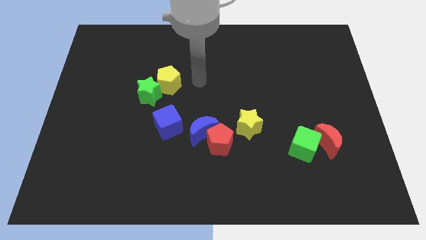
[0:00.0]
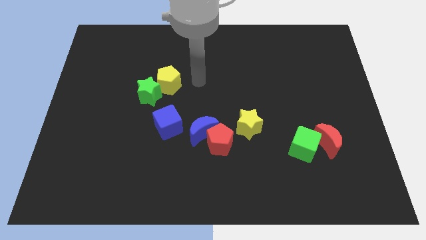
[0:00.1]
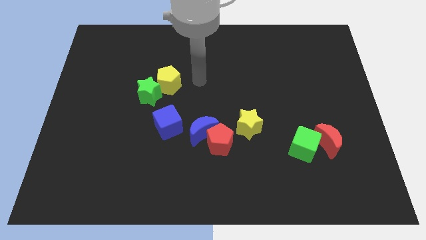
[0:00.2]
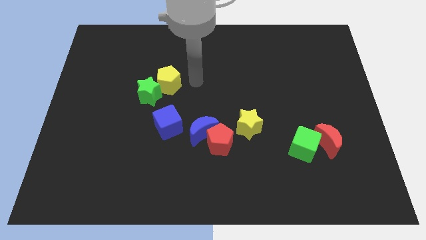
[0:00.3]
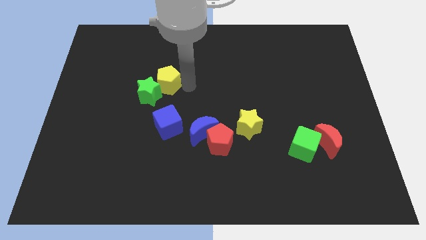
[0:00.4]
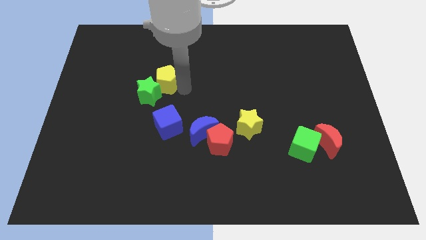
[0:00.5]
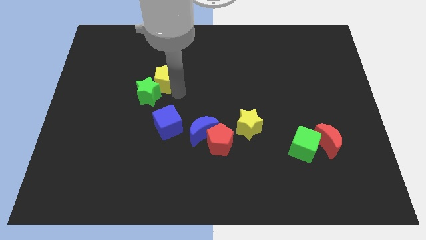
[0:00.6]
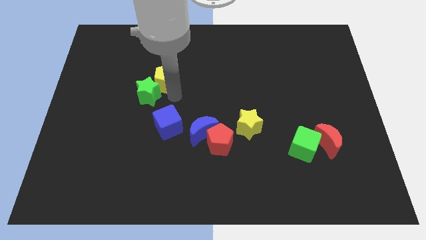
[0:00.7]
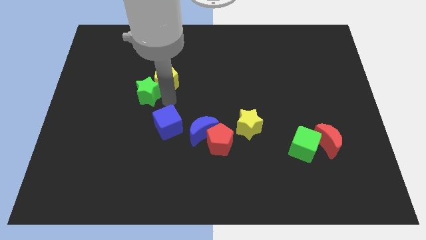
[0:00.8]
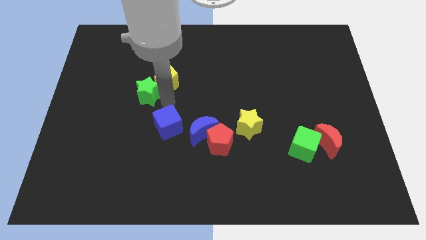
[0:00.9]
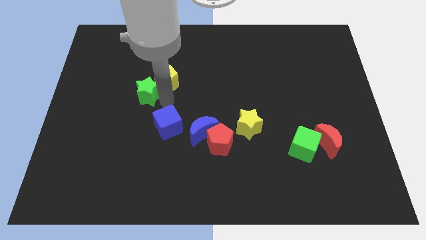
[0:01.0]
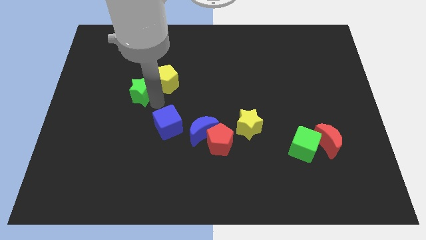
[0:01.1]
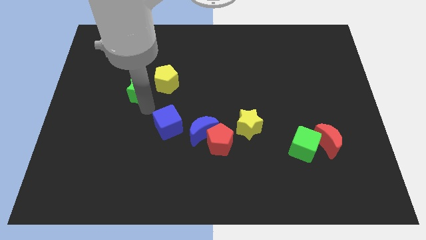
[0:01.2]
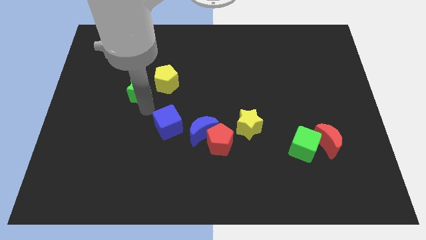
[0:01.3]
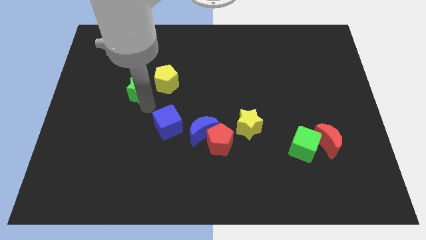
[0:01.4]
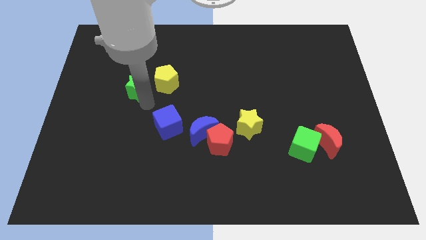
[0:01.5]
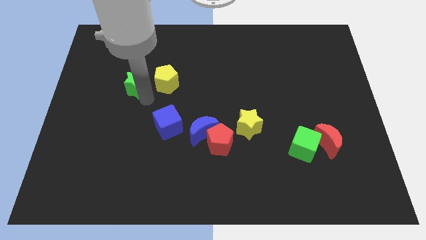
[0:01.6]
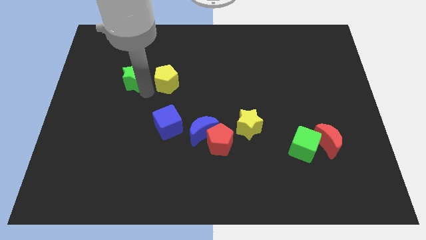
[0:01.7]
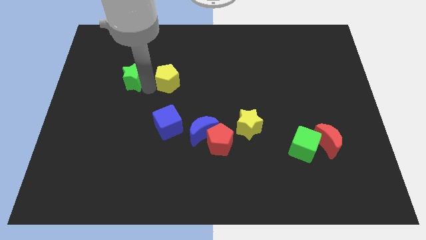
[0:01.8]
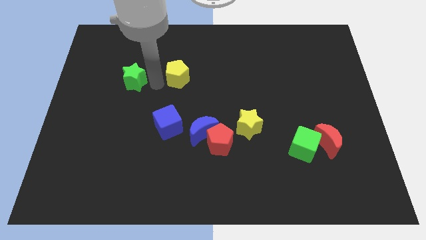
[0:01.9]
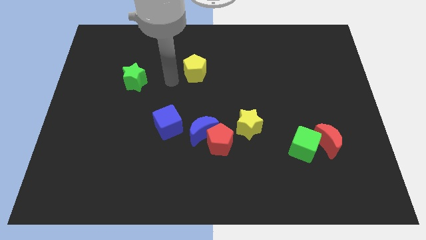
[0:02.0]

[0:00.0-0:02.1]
separate green star and the yellow pentagon

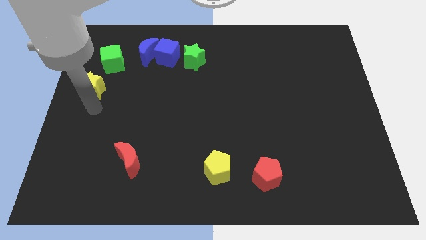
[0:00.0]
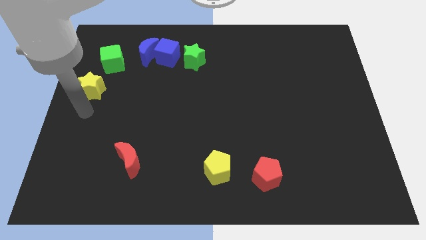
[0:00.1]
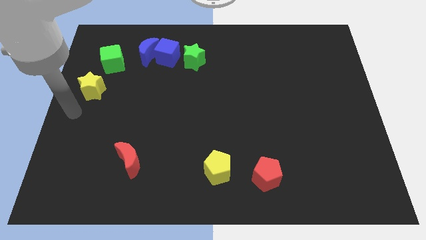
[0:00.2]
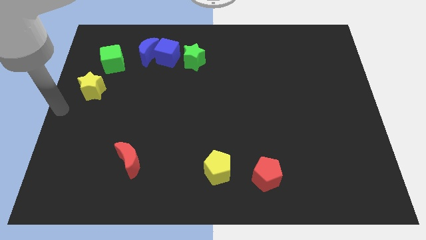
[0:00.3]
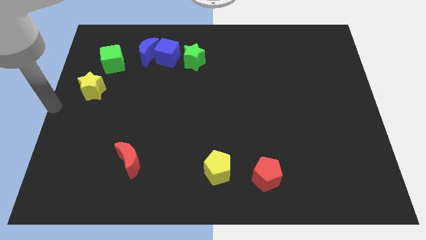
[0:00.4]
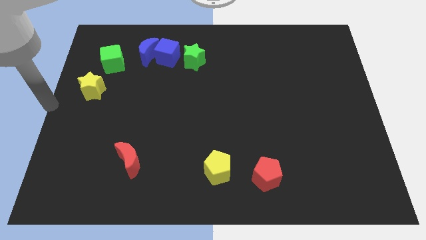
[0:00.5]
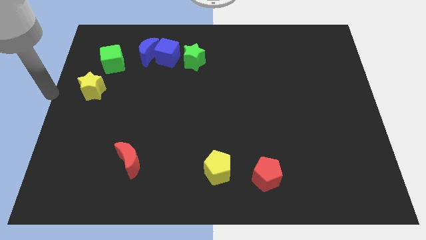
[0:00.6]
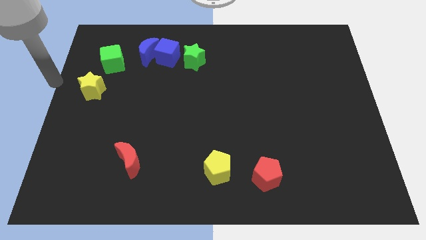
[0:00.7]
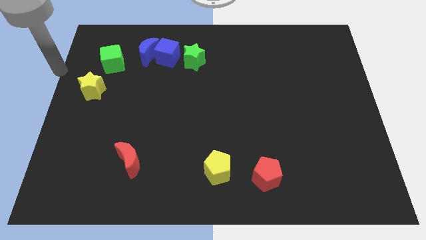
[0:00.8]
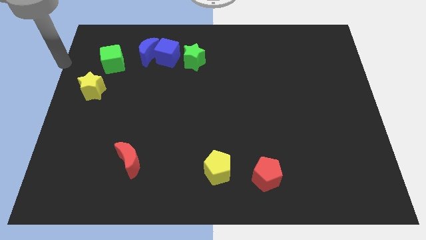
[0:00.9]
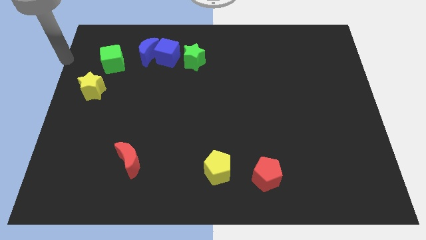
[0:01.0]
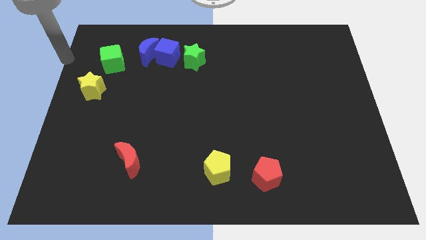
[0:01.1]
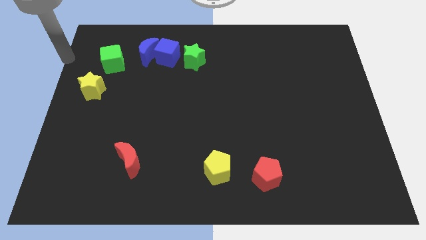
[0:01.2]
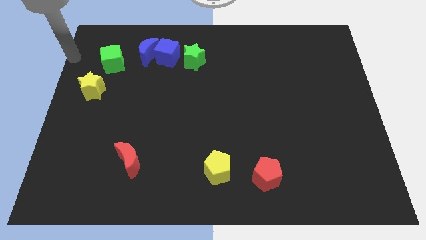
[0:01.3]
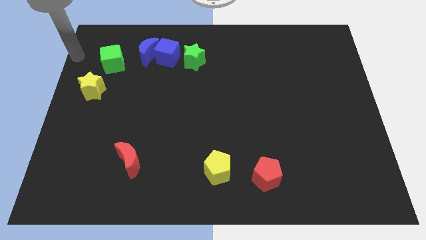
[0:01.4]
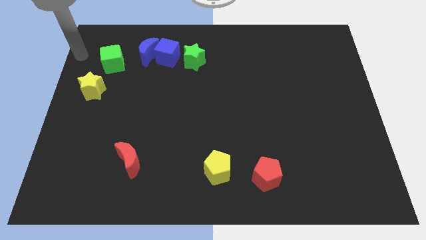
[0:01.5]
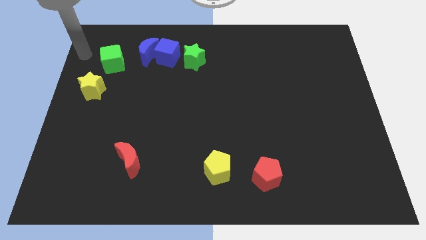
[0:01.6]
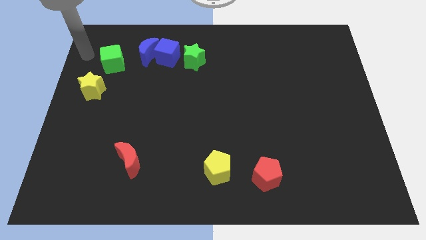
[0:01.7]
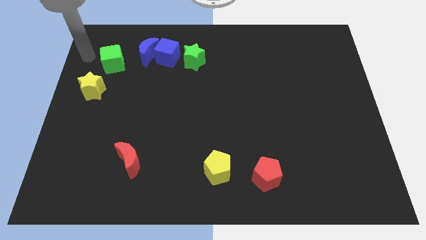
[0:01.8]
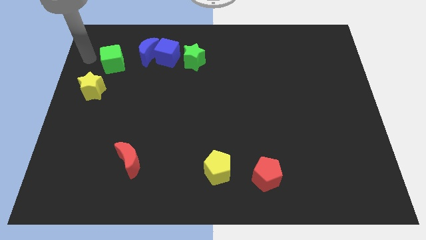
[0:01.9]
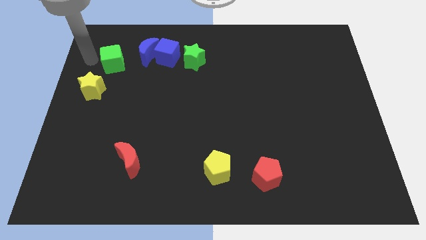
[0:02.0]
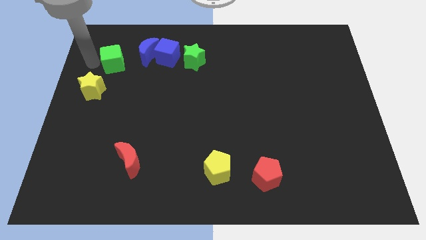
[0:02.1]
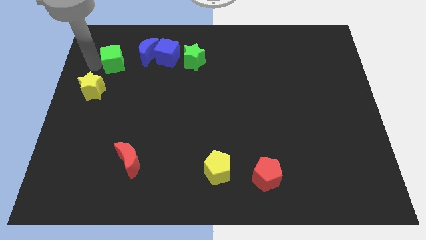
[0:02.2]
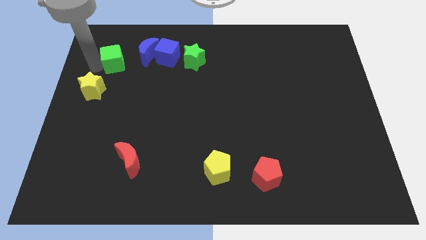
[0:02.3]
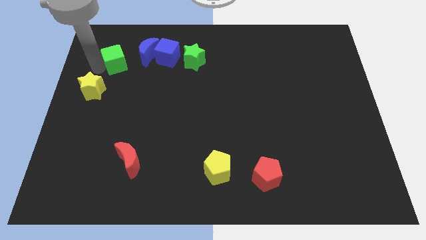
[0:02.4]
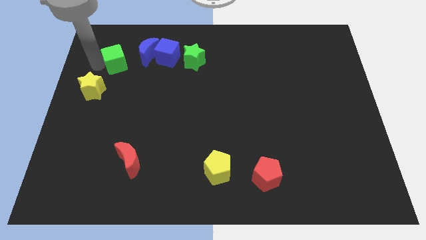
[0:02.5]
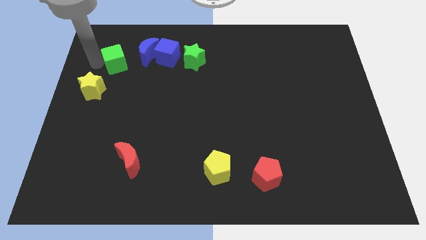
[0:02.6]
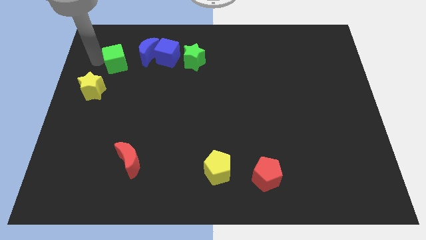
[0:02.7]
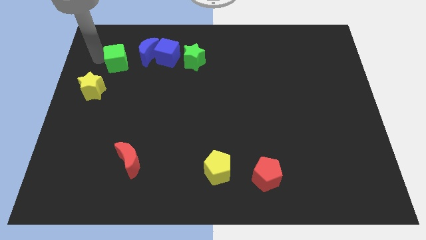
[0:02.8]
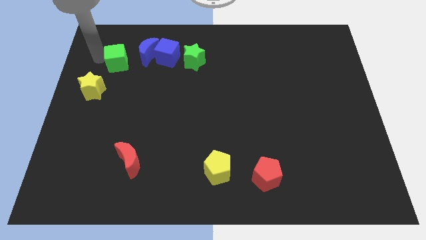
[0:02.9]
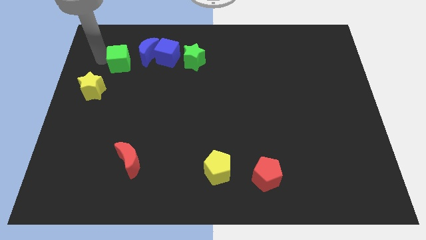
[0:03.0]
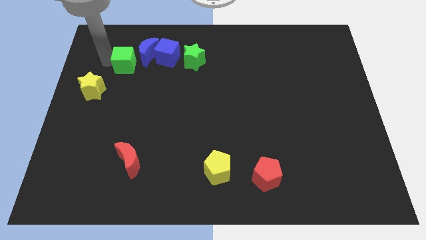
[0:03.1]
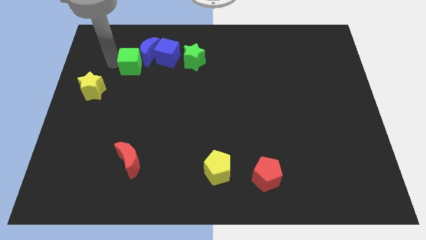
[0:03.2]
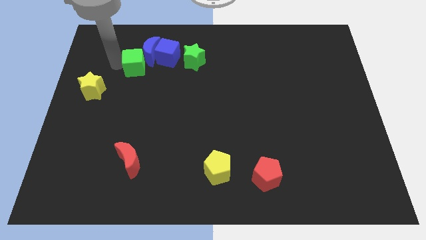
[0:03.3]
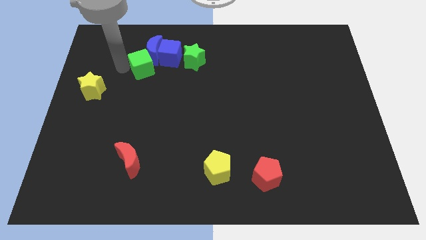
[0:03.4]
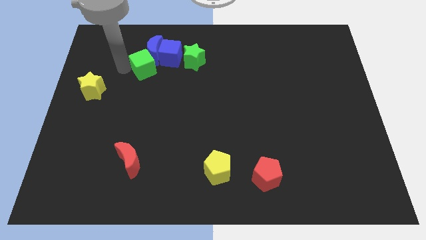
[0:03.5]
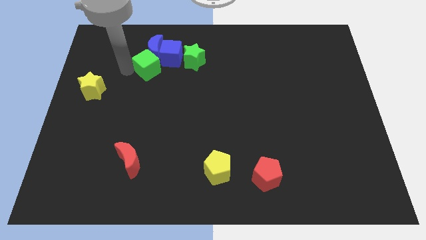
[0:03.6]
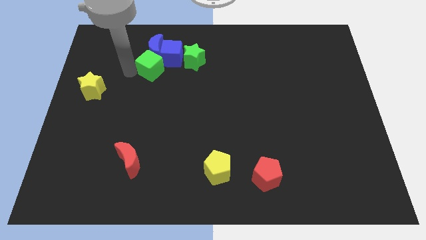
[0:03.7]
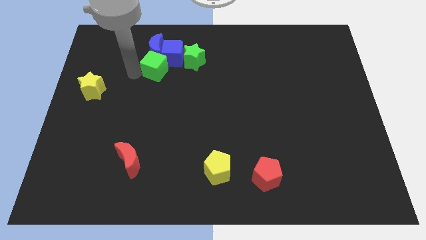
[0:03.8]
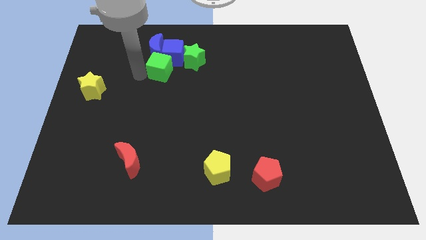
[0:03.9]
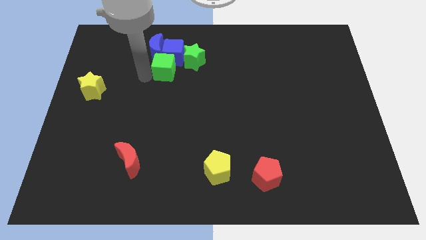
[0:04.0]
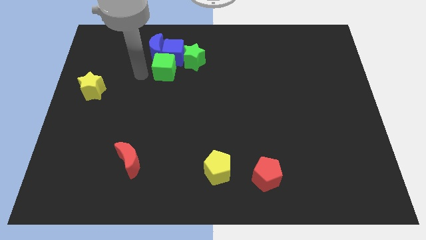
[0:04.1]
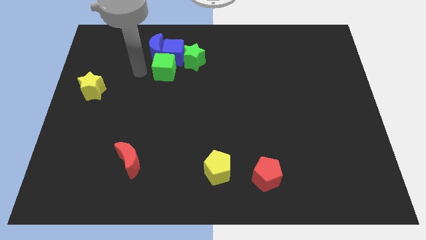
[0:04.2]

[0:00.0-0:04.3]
move green cube below the blue cube

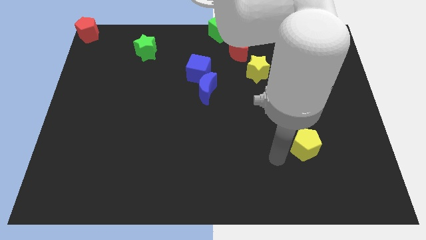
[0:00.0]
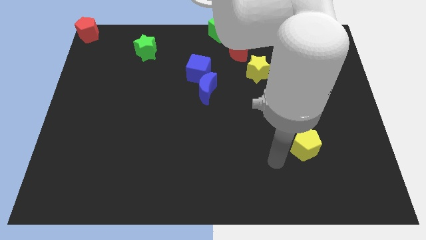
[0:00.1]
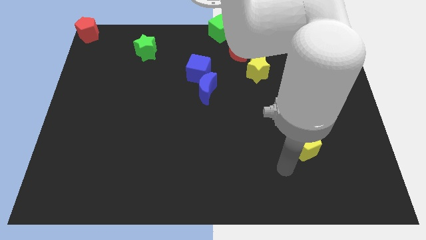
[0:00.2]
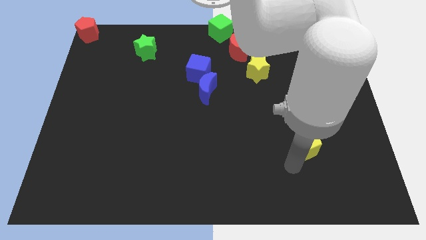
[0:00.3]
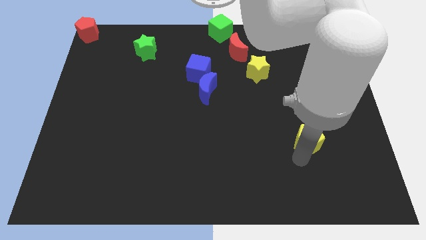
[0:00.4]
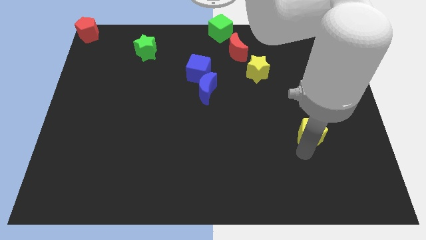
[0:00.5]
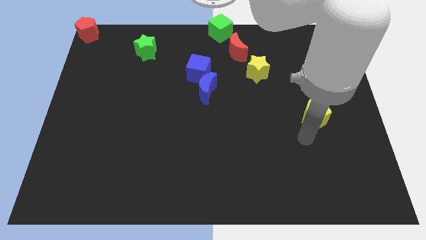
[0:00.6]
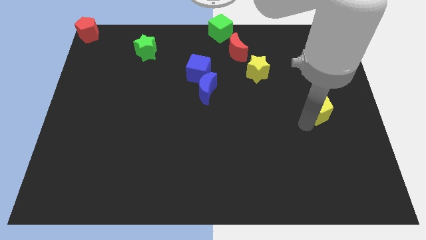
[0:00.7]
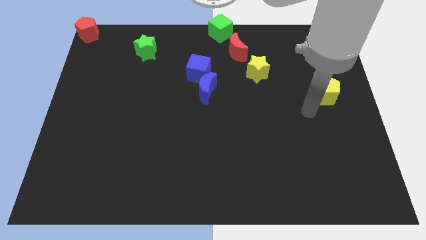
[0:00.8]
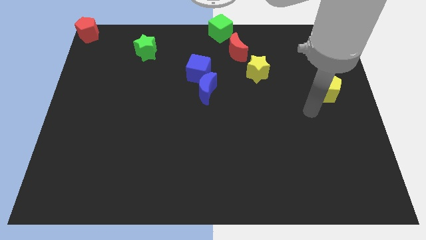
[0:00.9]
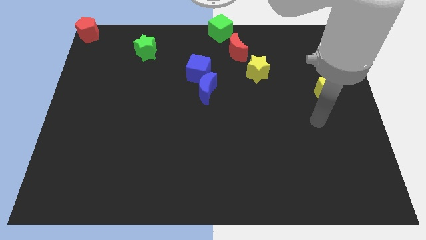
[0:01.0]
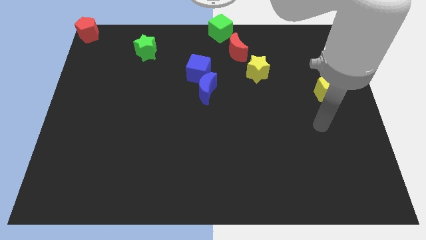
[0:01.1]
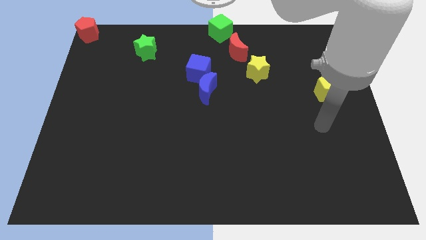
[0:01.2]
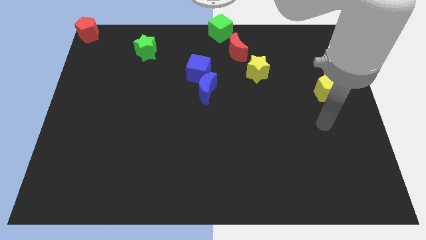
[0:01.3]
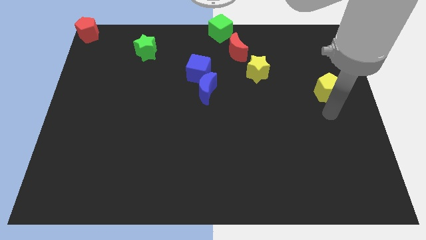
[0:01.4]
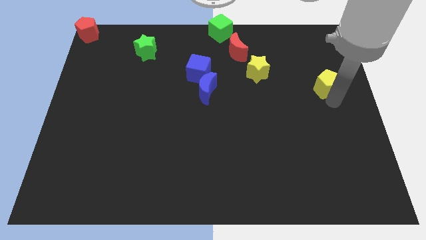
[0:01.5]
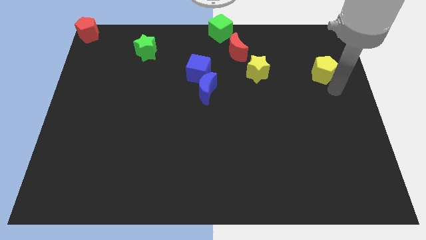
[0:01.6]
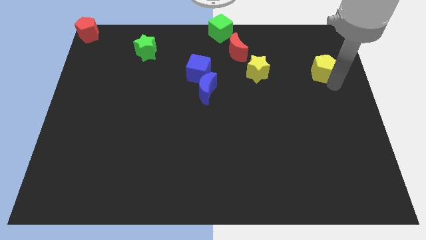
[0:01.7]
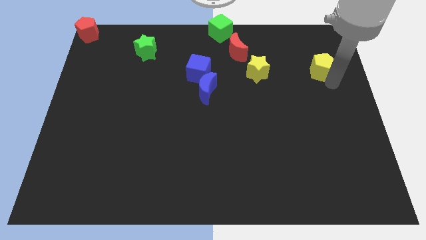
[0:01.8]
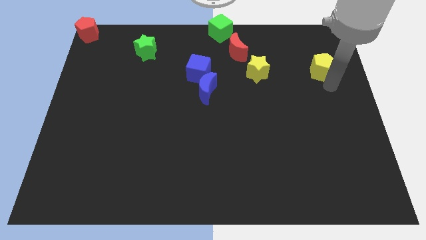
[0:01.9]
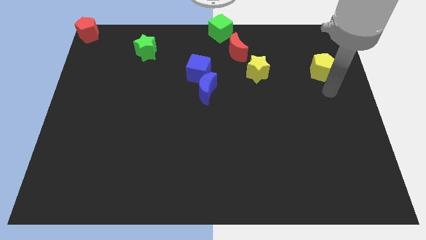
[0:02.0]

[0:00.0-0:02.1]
push yellow pentagon towards the top right corner of the board

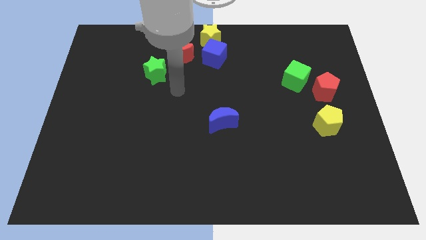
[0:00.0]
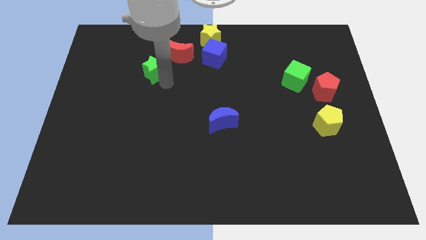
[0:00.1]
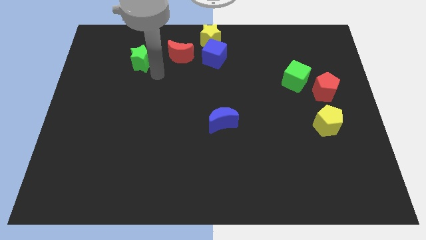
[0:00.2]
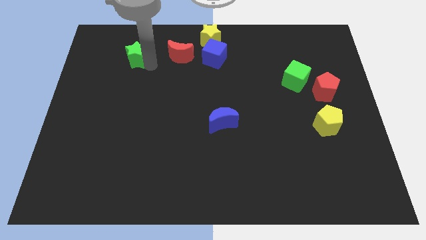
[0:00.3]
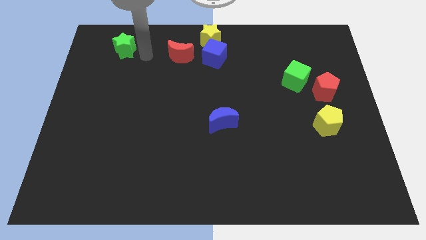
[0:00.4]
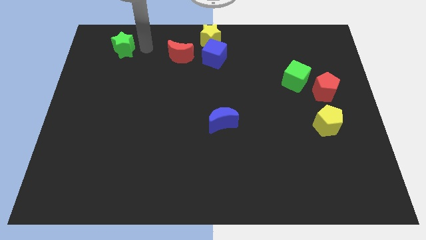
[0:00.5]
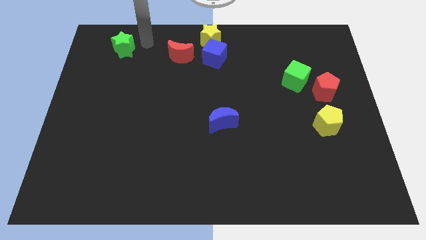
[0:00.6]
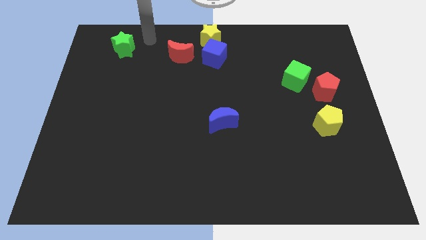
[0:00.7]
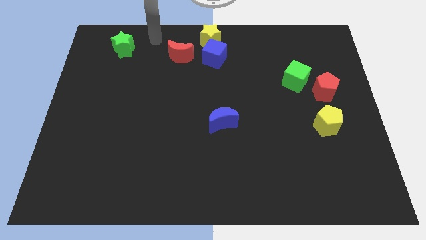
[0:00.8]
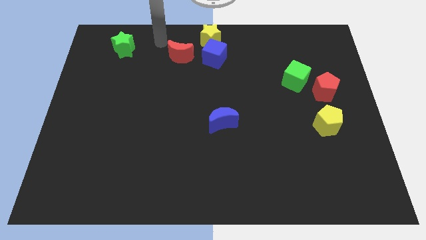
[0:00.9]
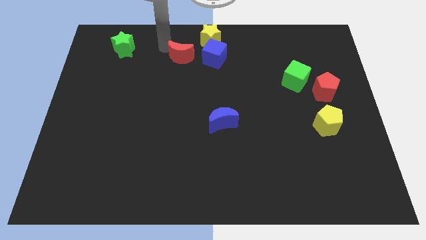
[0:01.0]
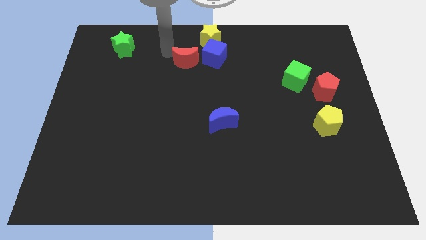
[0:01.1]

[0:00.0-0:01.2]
push the green star to the top left side of the board
